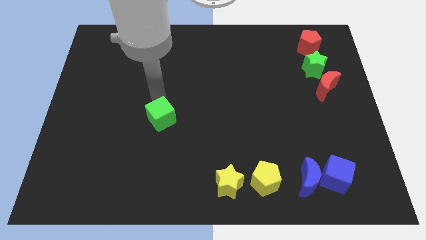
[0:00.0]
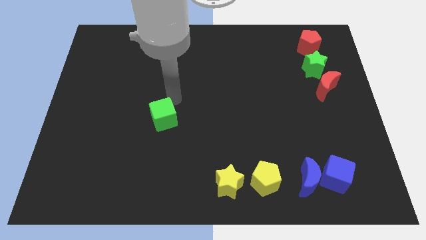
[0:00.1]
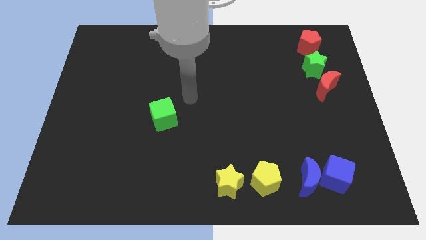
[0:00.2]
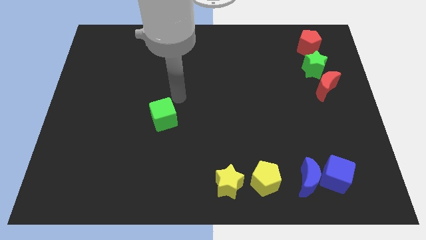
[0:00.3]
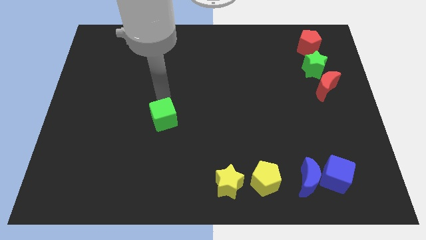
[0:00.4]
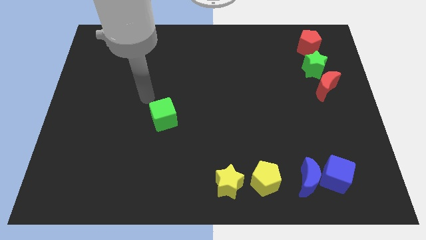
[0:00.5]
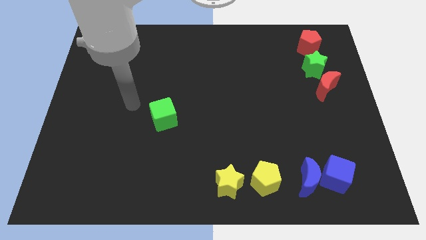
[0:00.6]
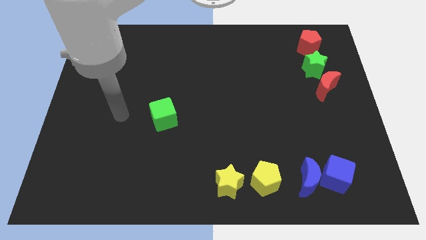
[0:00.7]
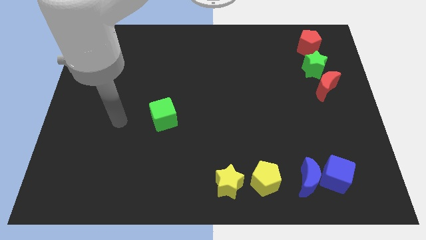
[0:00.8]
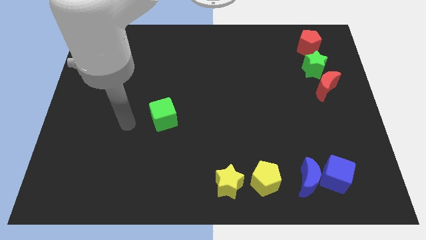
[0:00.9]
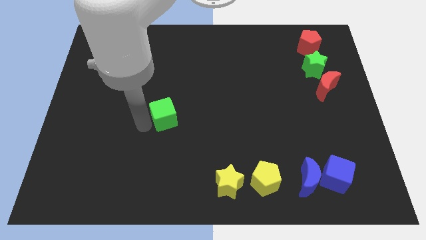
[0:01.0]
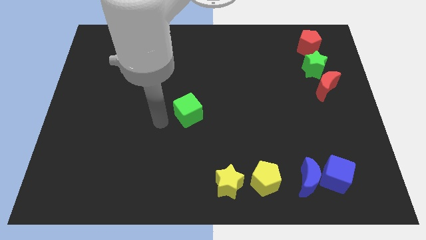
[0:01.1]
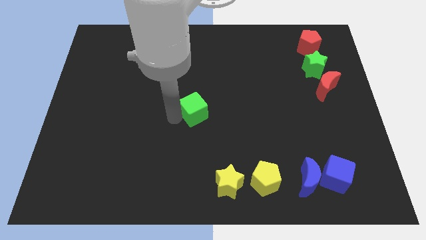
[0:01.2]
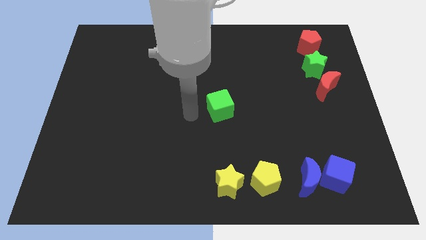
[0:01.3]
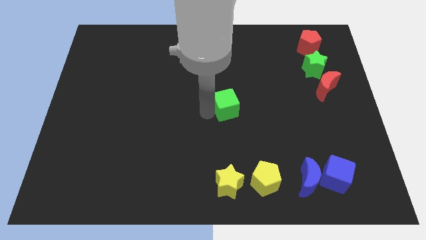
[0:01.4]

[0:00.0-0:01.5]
move green cube at center

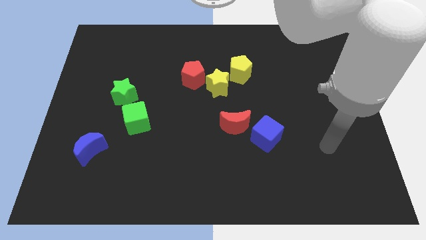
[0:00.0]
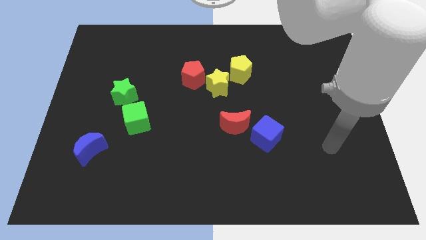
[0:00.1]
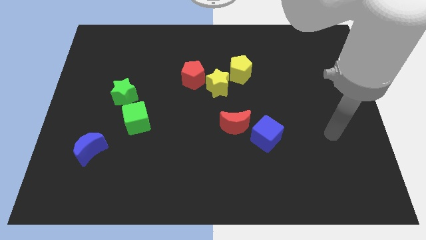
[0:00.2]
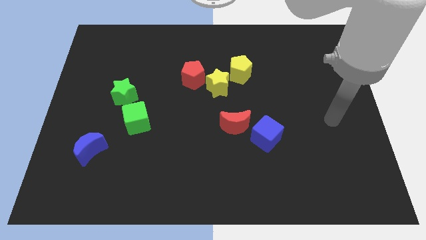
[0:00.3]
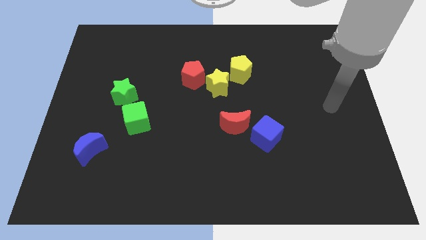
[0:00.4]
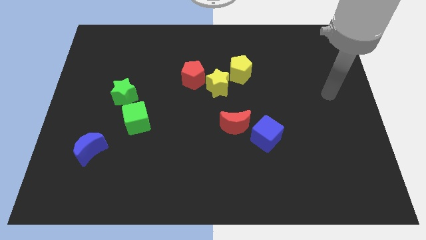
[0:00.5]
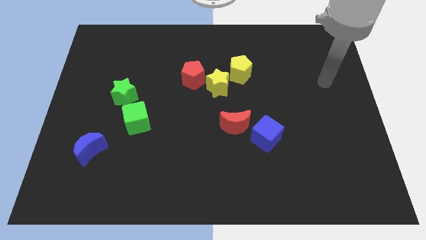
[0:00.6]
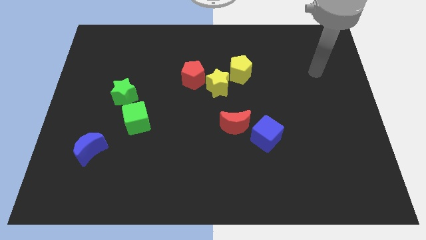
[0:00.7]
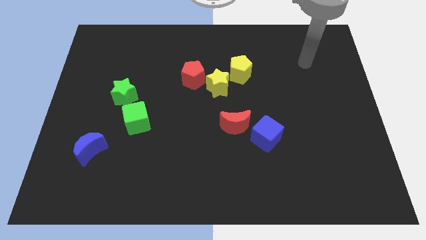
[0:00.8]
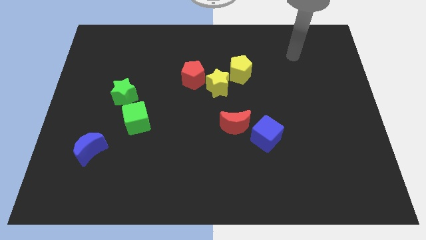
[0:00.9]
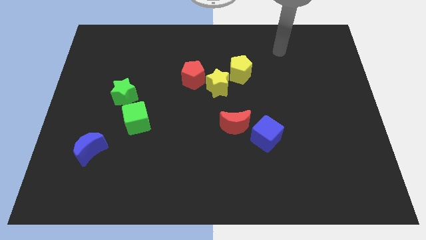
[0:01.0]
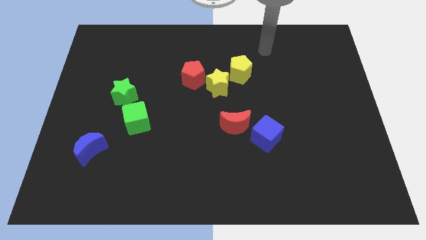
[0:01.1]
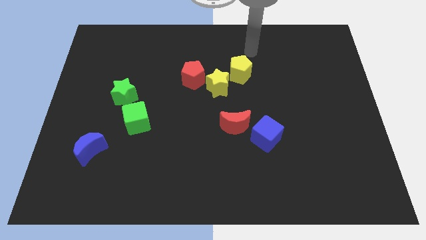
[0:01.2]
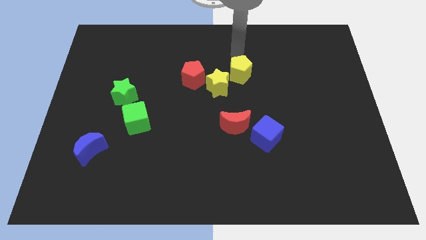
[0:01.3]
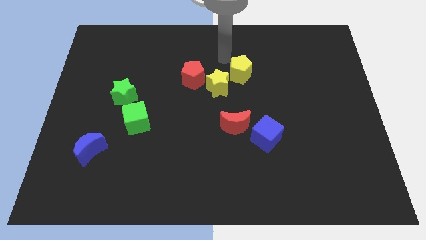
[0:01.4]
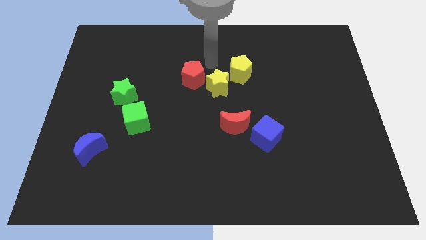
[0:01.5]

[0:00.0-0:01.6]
place your arm at the top of yellow star

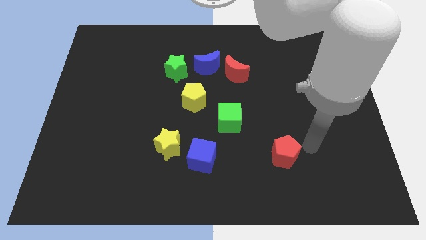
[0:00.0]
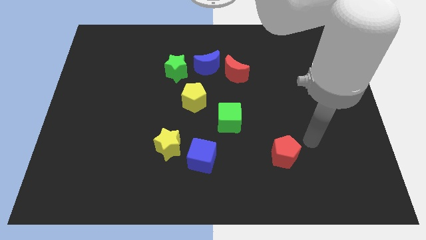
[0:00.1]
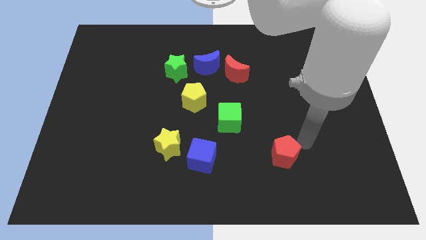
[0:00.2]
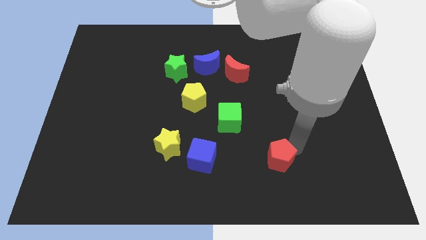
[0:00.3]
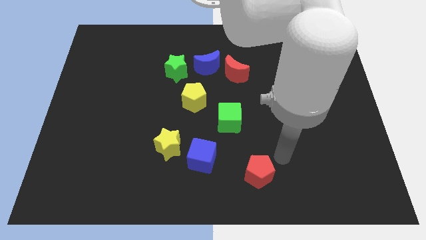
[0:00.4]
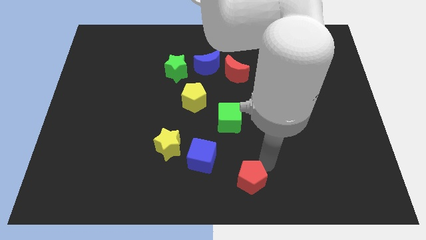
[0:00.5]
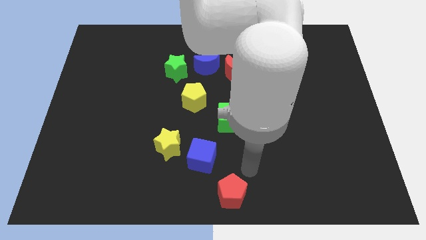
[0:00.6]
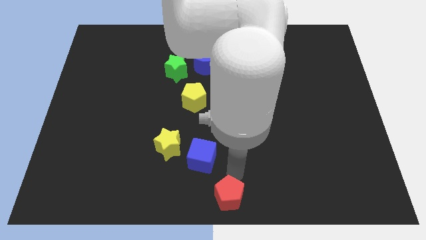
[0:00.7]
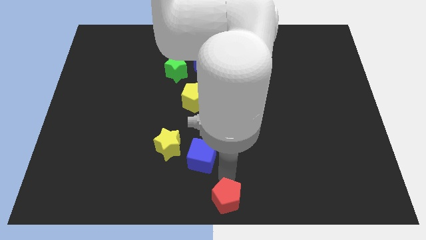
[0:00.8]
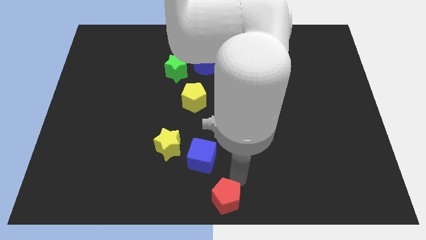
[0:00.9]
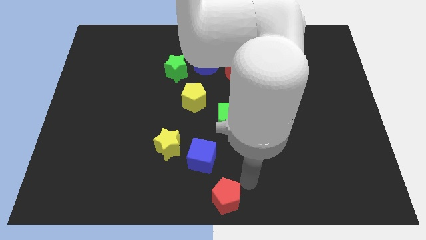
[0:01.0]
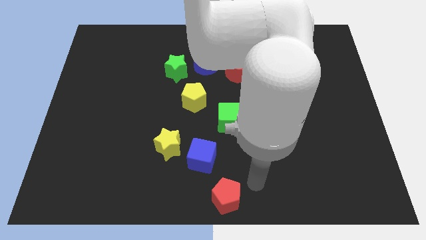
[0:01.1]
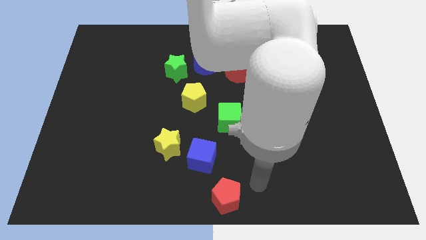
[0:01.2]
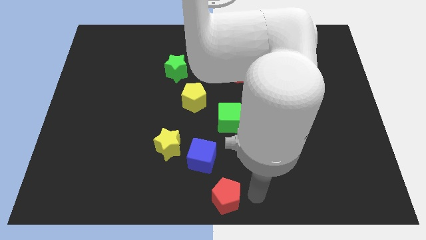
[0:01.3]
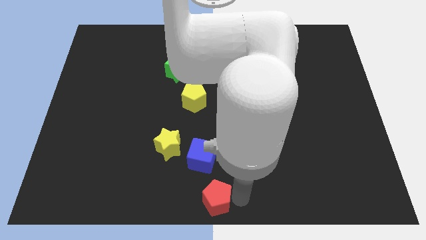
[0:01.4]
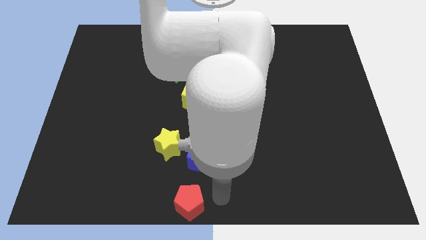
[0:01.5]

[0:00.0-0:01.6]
slide the red pentagon to the bottom center of the board

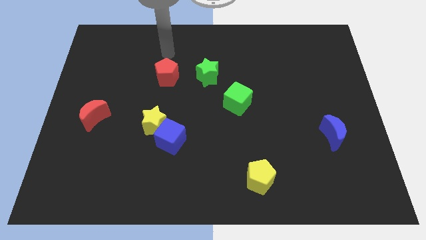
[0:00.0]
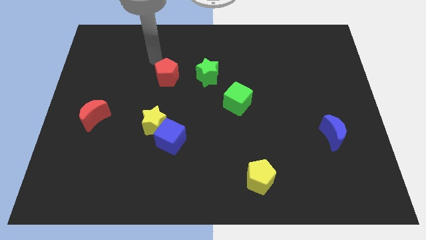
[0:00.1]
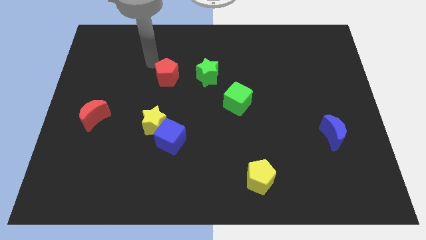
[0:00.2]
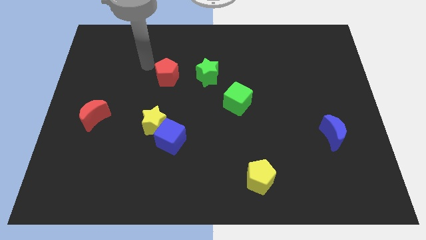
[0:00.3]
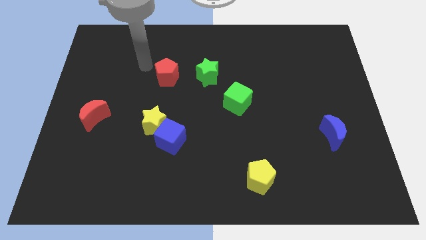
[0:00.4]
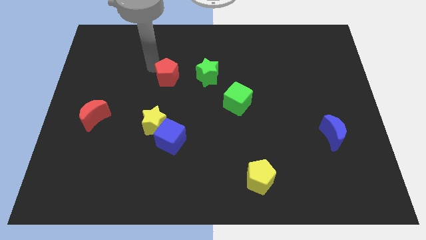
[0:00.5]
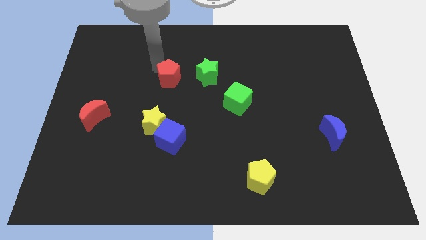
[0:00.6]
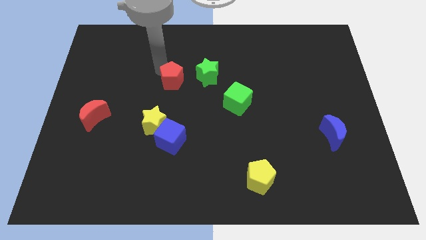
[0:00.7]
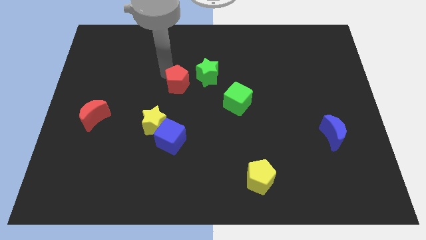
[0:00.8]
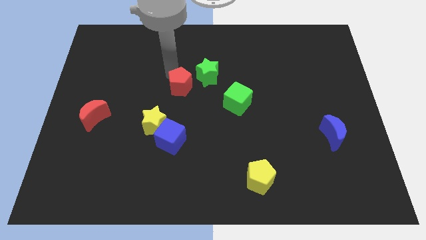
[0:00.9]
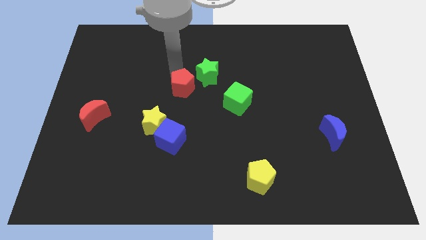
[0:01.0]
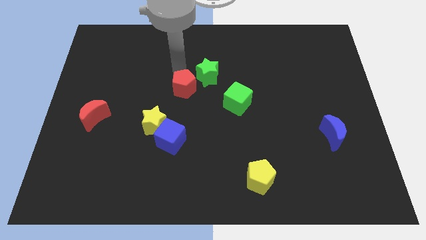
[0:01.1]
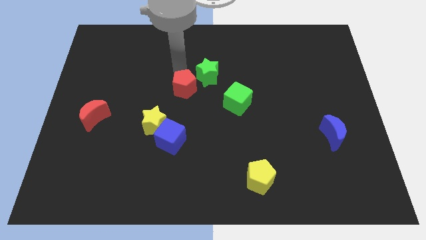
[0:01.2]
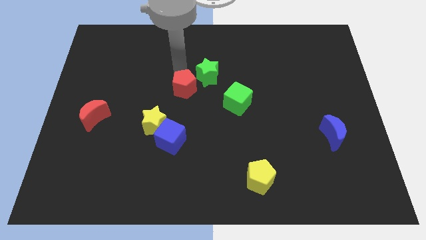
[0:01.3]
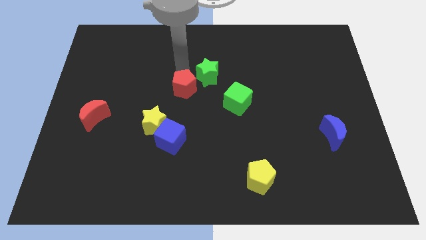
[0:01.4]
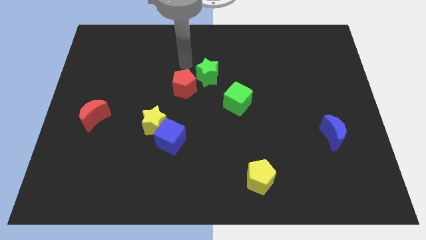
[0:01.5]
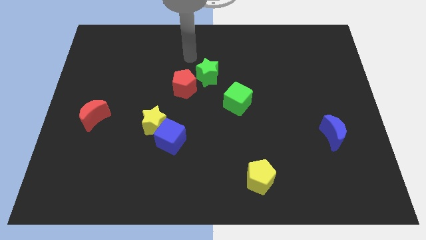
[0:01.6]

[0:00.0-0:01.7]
move the red pentagon diagonally to the bottom left of the green star

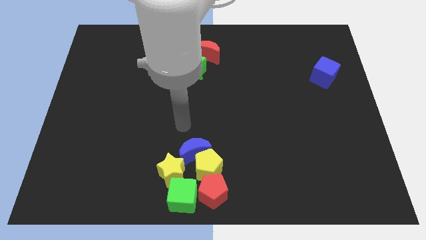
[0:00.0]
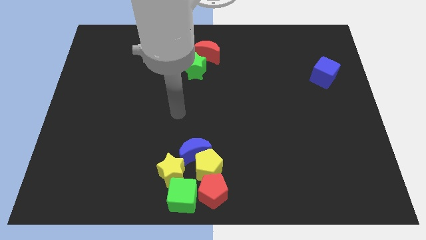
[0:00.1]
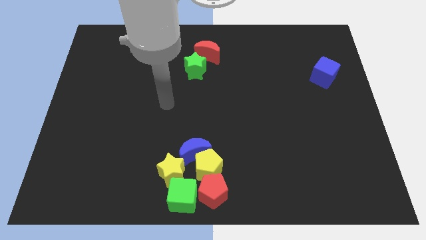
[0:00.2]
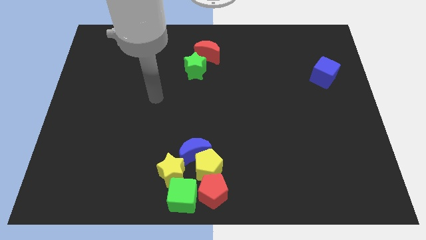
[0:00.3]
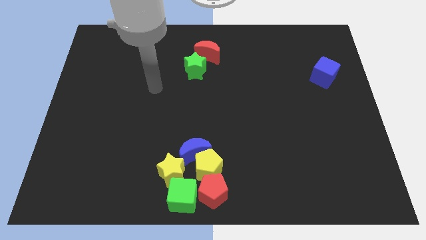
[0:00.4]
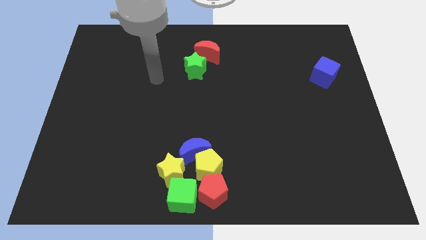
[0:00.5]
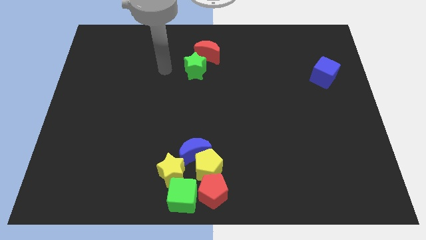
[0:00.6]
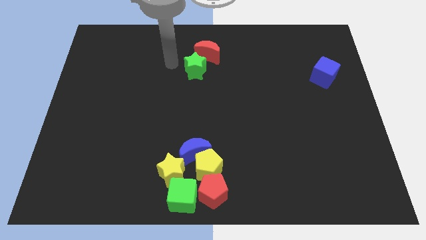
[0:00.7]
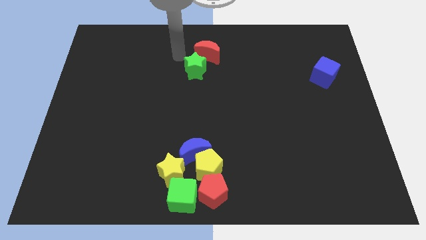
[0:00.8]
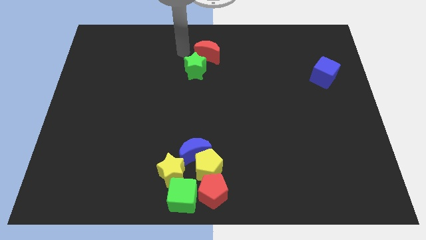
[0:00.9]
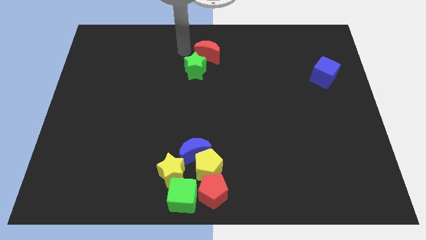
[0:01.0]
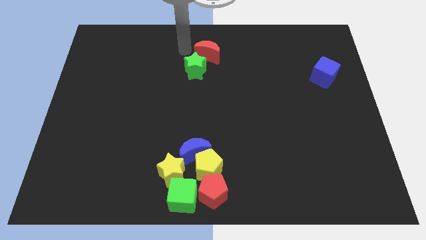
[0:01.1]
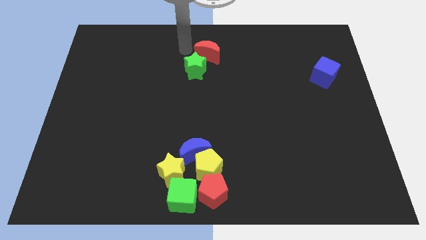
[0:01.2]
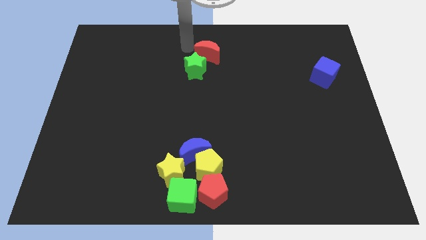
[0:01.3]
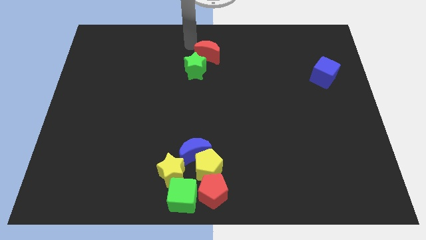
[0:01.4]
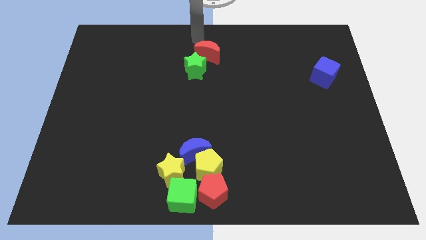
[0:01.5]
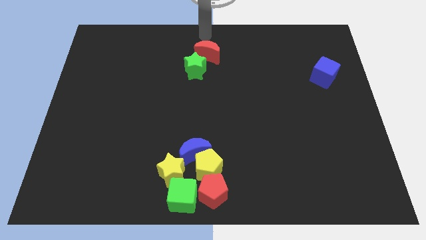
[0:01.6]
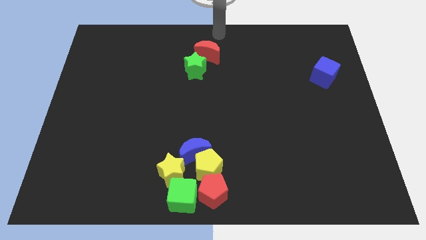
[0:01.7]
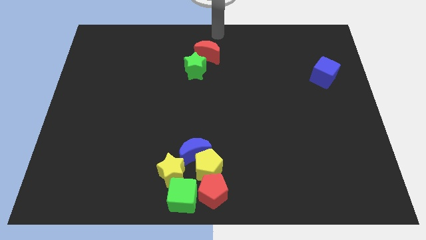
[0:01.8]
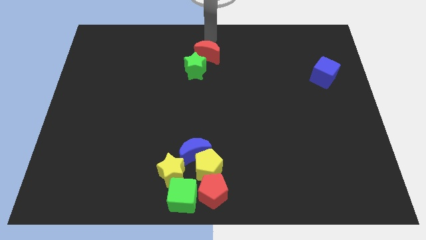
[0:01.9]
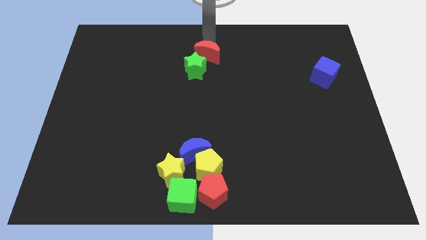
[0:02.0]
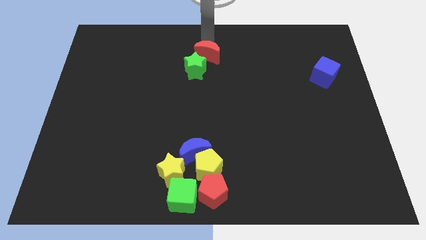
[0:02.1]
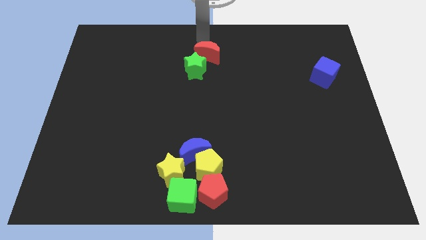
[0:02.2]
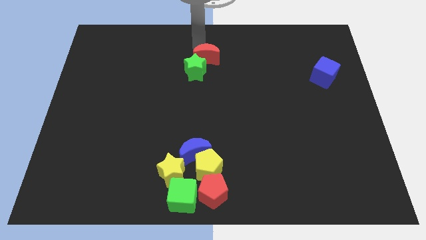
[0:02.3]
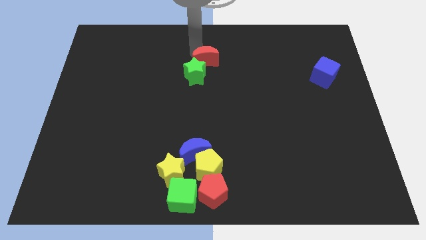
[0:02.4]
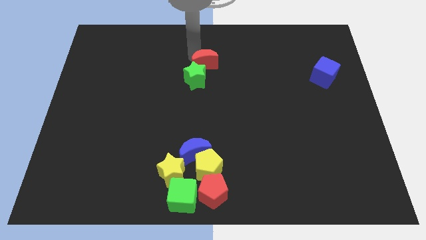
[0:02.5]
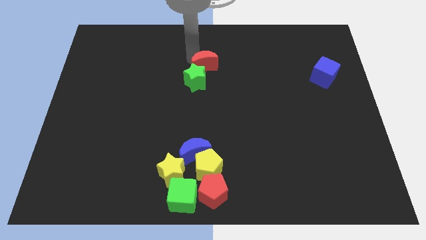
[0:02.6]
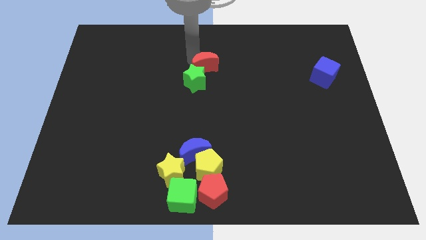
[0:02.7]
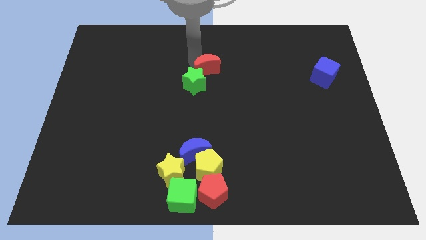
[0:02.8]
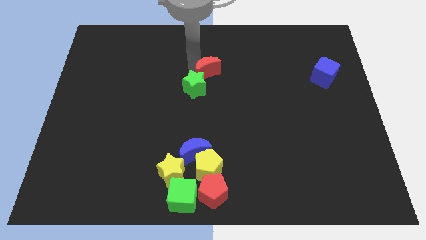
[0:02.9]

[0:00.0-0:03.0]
move the red crescent above the green star
